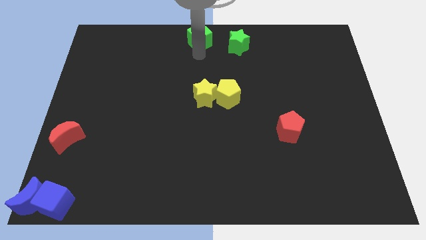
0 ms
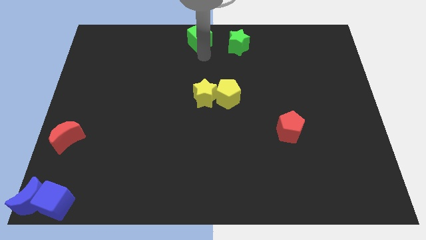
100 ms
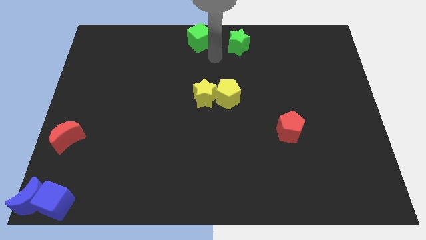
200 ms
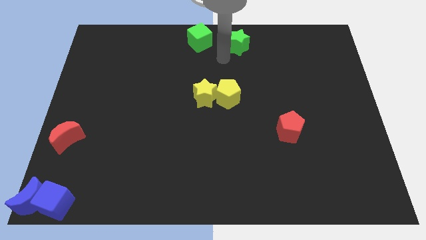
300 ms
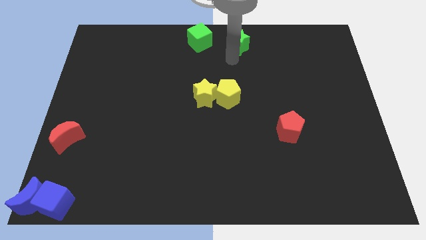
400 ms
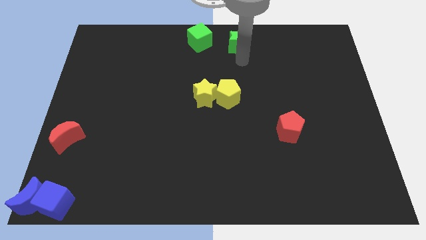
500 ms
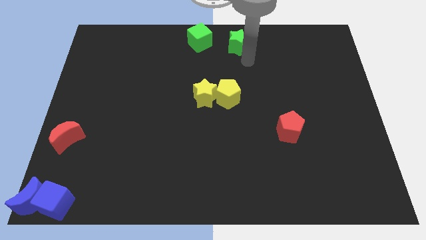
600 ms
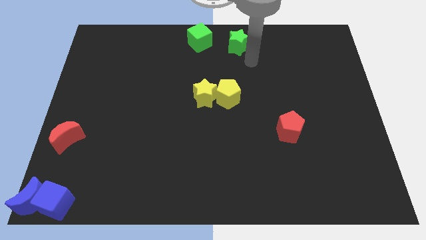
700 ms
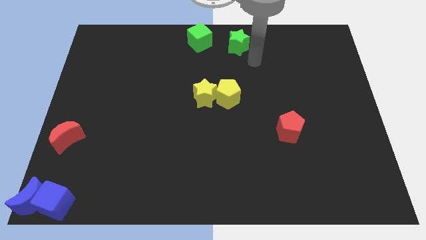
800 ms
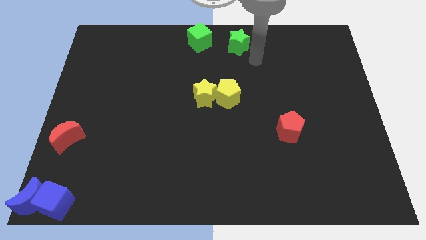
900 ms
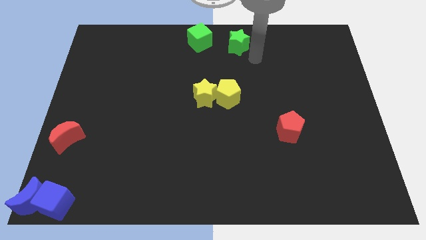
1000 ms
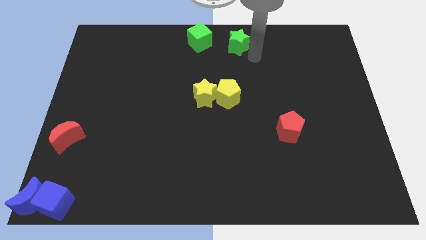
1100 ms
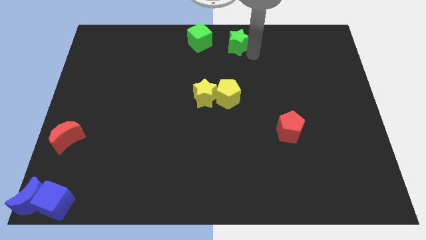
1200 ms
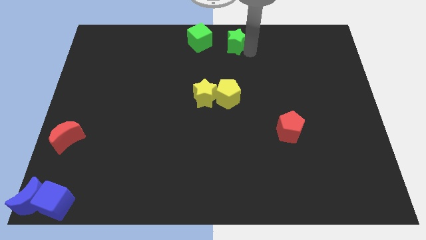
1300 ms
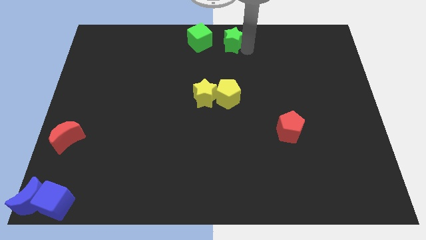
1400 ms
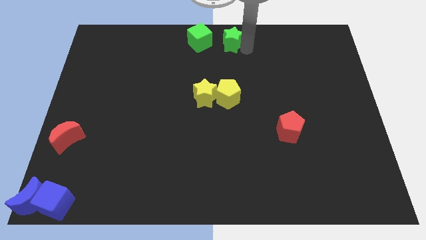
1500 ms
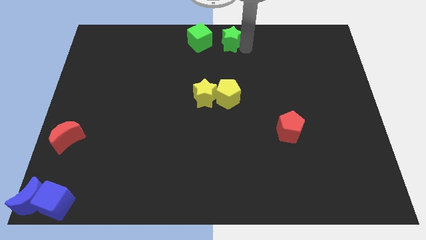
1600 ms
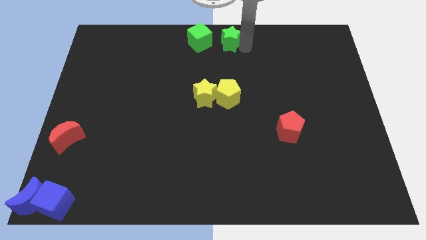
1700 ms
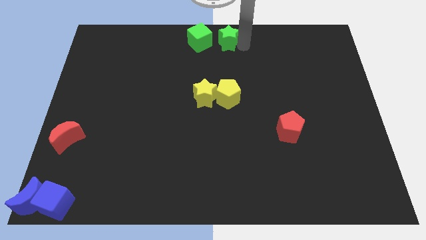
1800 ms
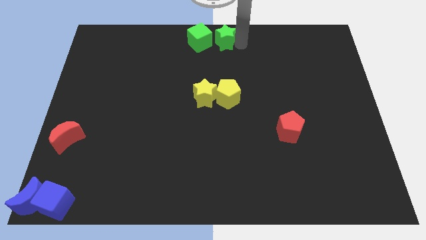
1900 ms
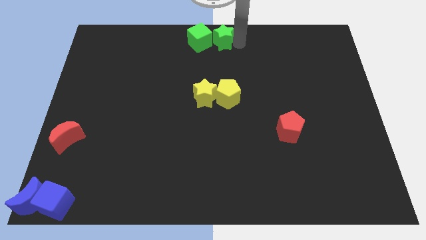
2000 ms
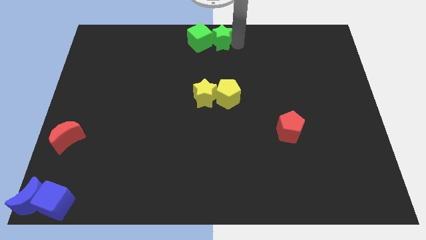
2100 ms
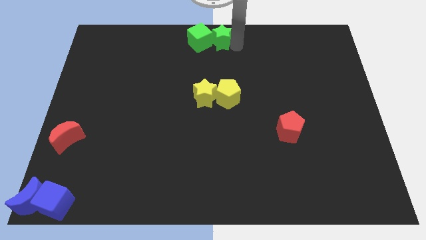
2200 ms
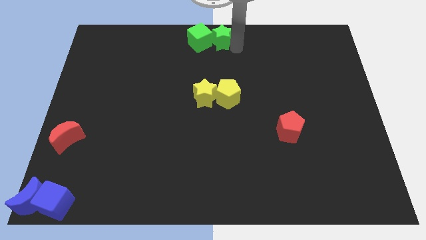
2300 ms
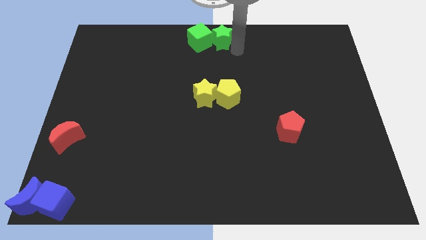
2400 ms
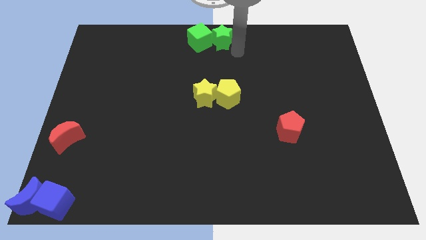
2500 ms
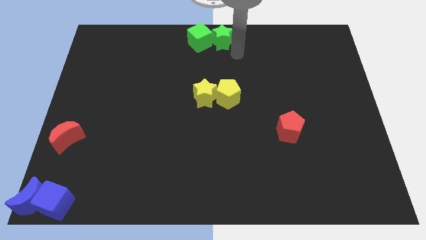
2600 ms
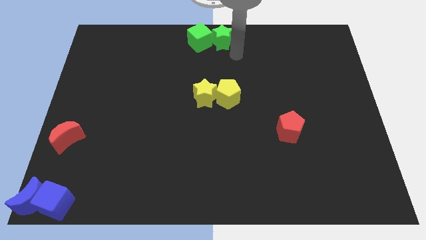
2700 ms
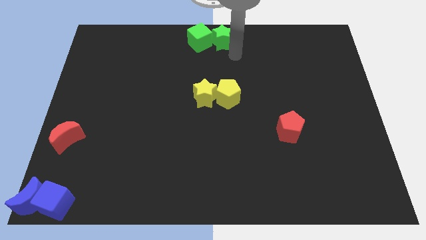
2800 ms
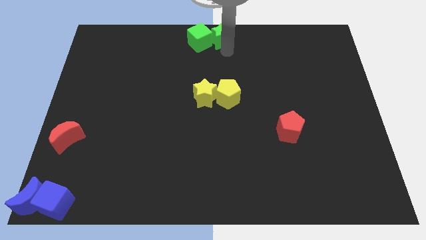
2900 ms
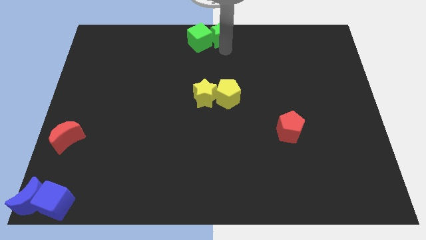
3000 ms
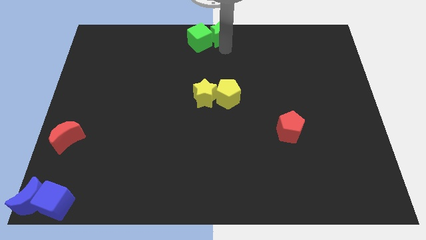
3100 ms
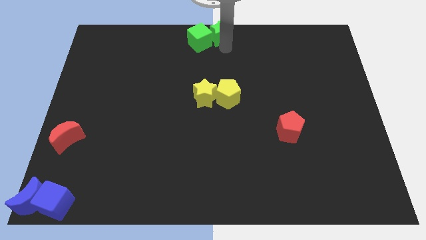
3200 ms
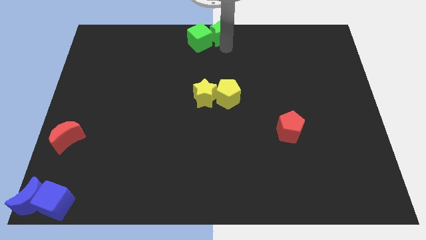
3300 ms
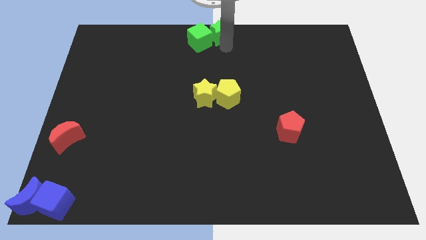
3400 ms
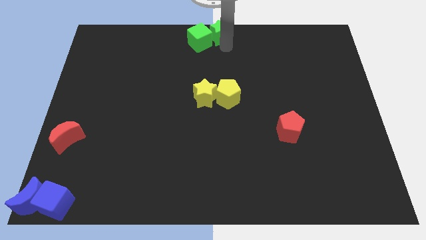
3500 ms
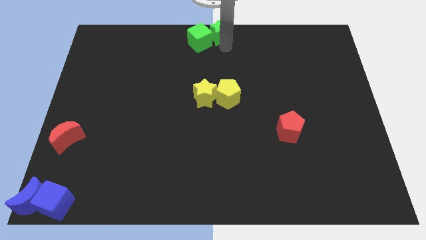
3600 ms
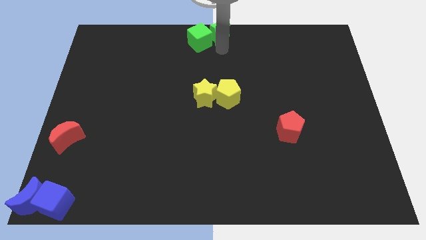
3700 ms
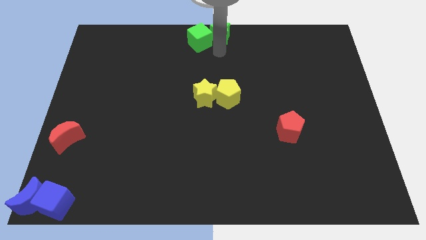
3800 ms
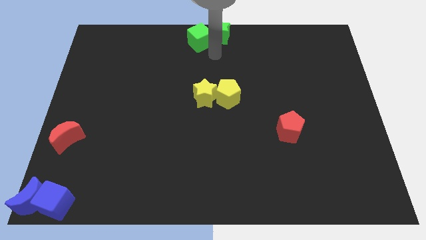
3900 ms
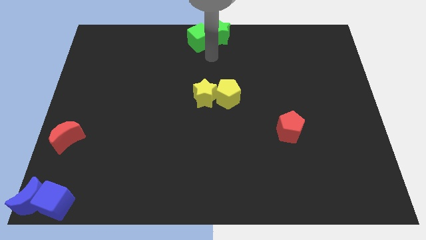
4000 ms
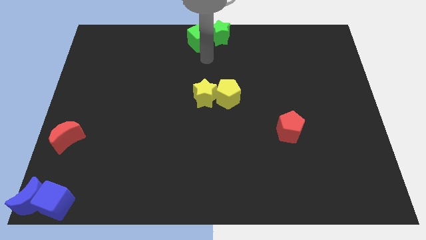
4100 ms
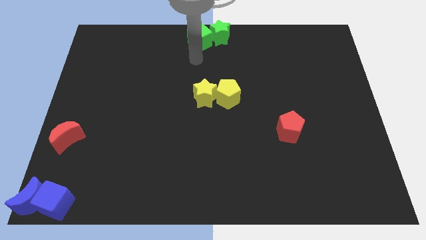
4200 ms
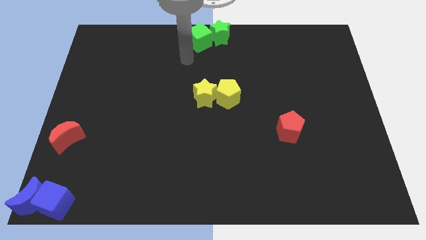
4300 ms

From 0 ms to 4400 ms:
move the green star to the right of the green cube

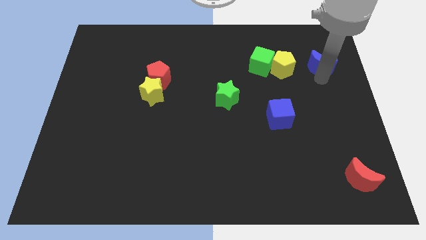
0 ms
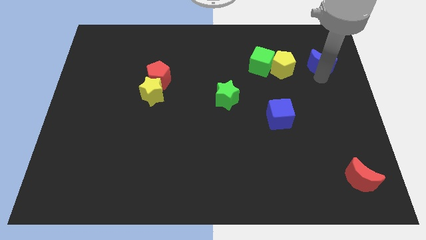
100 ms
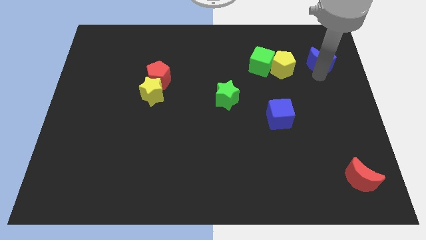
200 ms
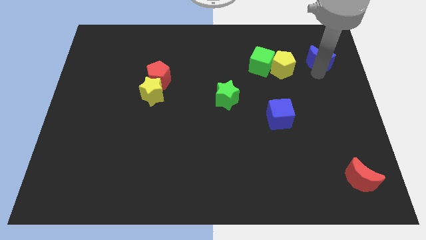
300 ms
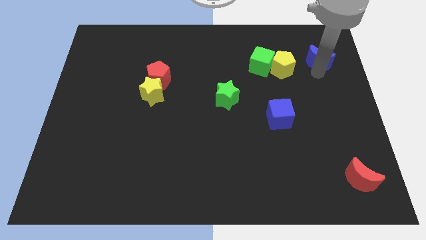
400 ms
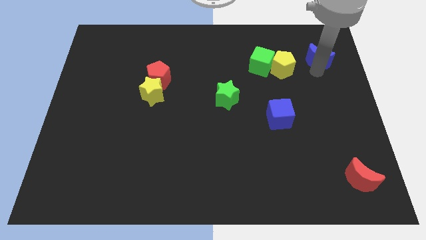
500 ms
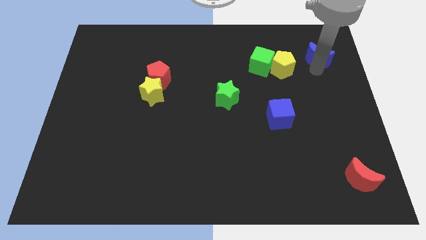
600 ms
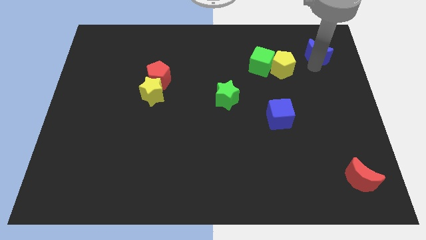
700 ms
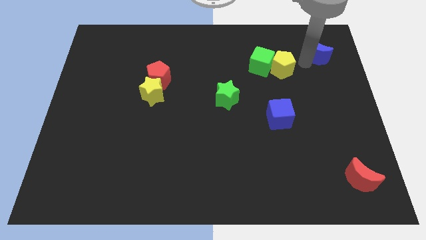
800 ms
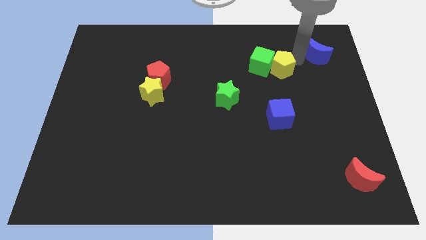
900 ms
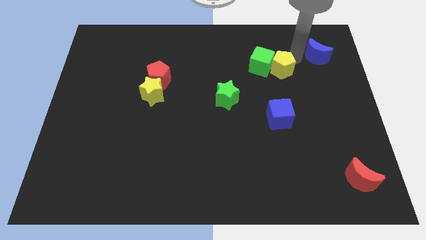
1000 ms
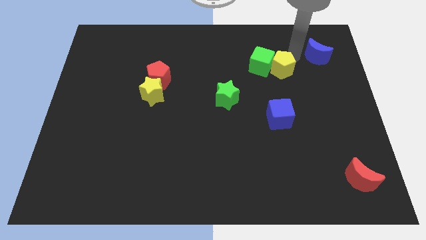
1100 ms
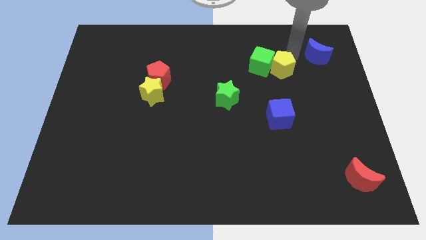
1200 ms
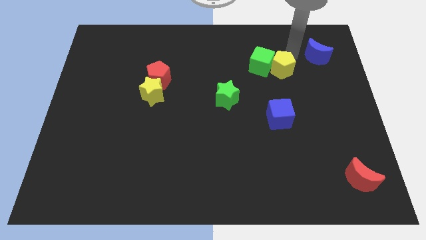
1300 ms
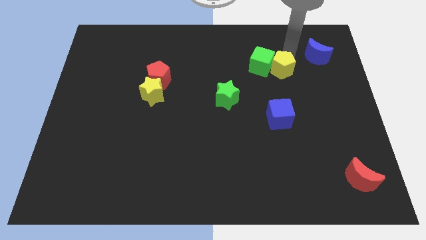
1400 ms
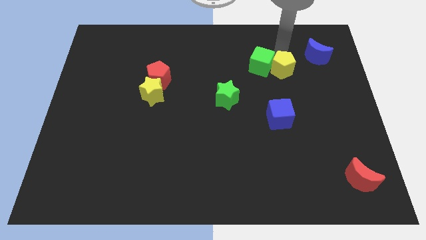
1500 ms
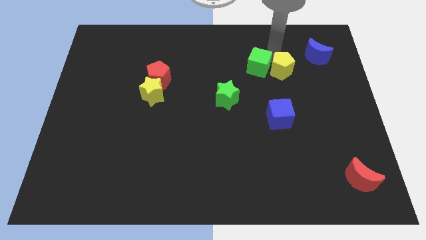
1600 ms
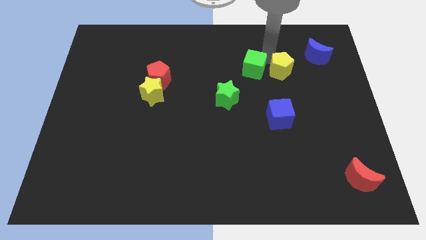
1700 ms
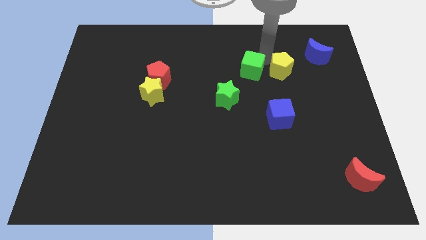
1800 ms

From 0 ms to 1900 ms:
push the blue crescent towards the top right corner of the board

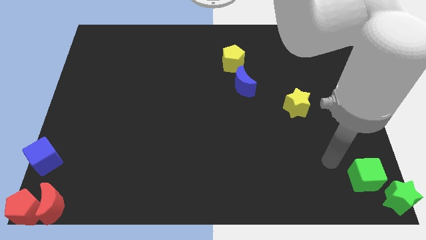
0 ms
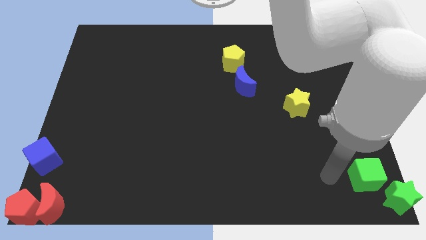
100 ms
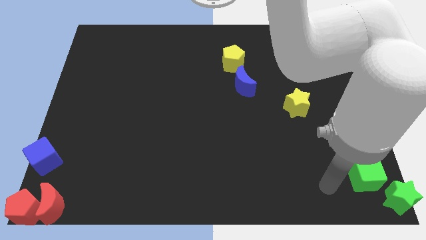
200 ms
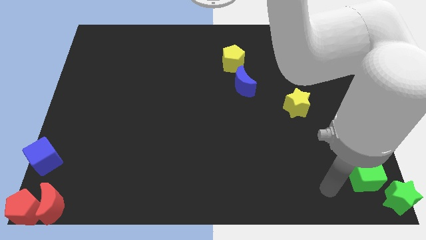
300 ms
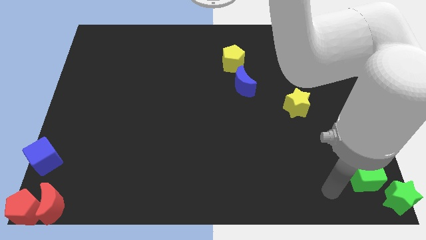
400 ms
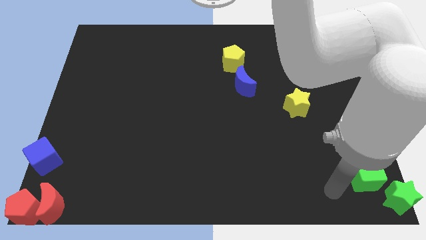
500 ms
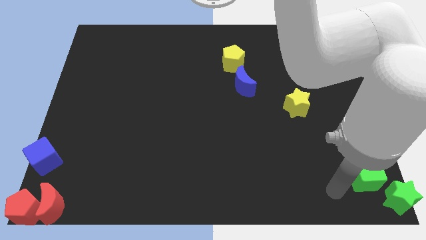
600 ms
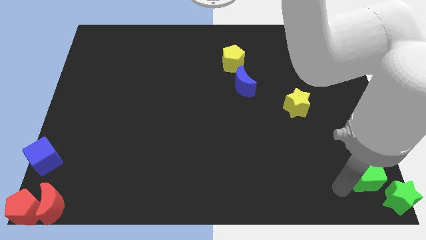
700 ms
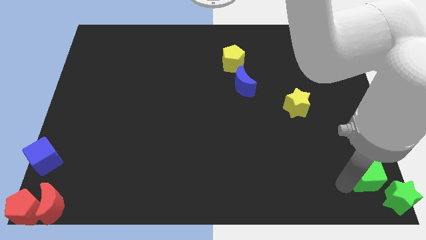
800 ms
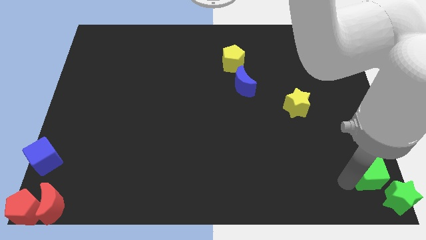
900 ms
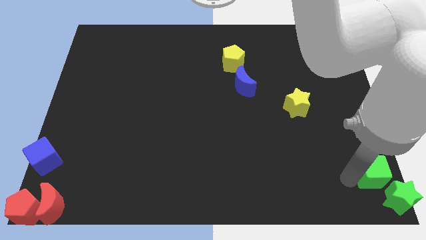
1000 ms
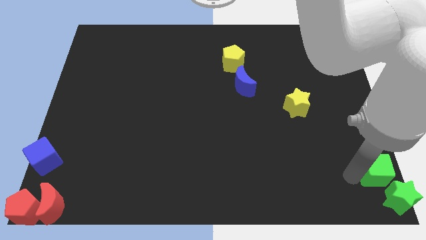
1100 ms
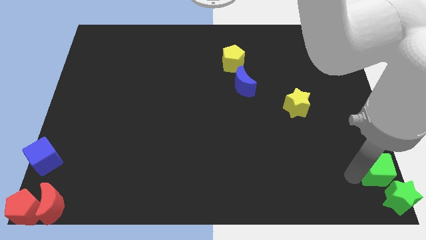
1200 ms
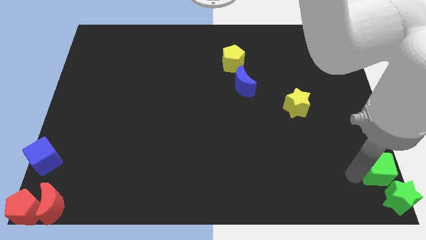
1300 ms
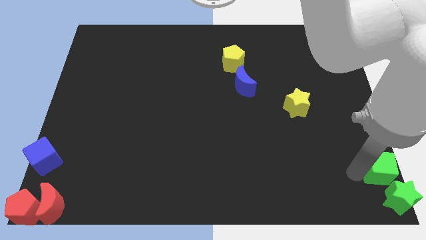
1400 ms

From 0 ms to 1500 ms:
move the arm towards the left side of the green cube

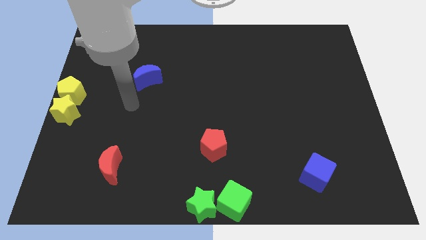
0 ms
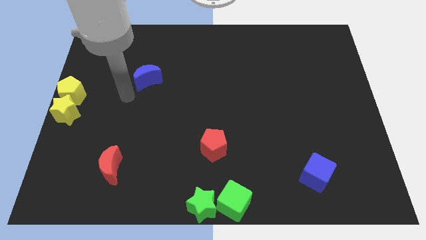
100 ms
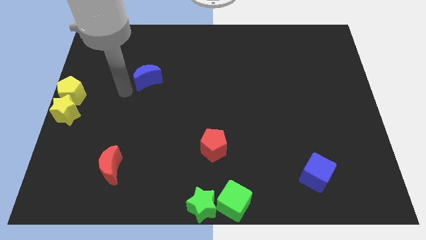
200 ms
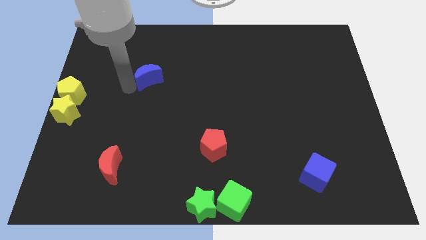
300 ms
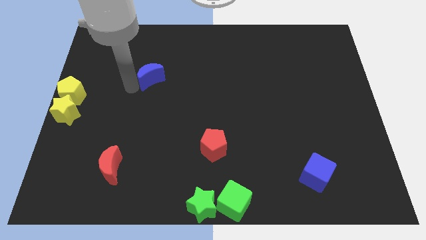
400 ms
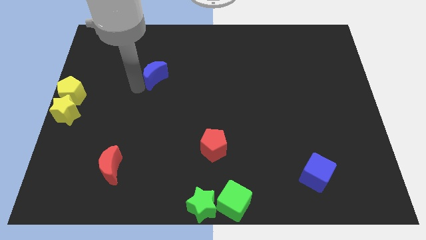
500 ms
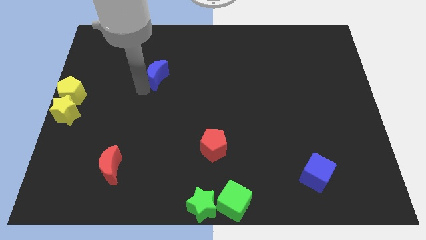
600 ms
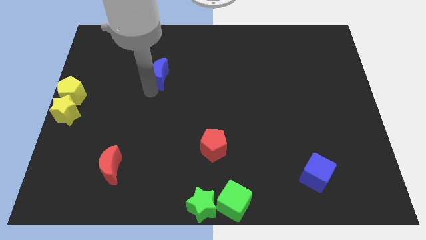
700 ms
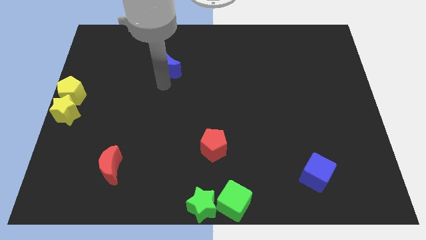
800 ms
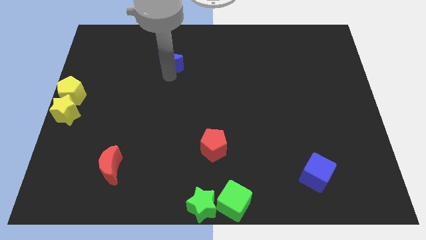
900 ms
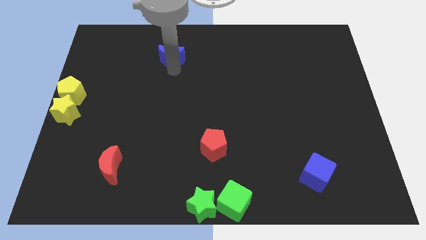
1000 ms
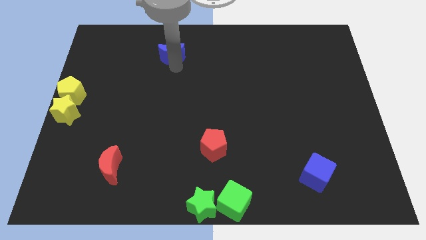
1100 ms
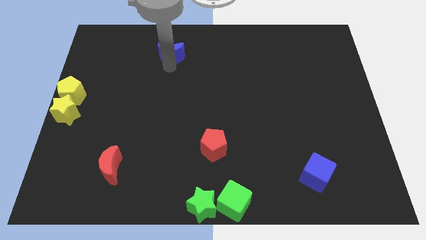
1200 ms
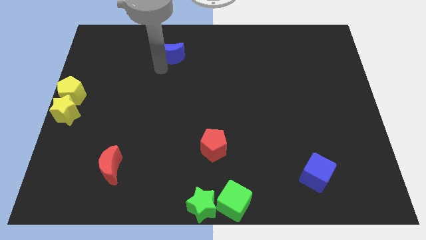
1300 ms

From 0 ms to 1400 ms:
push the blue moon to the top center

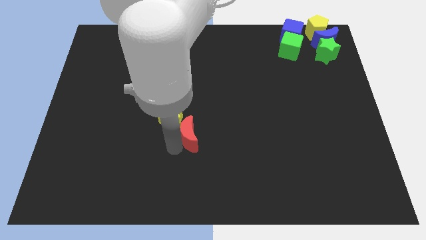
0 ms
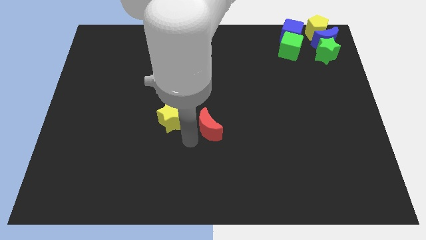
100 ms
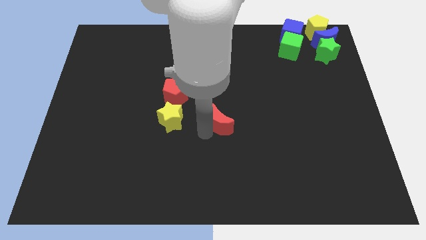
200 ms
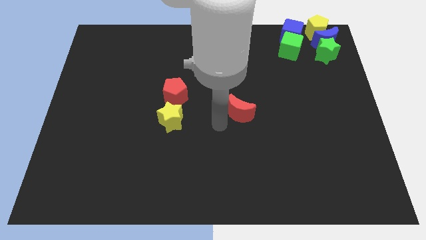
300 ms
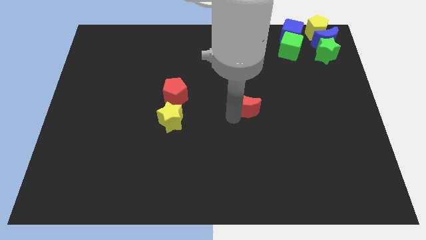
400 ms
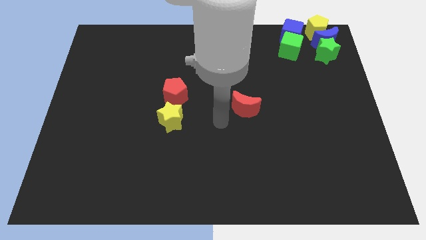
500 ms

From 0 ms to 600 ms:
move the red crescent to the center of the board
